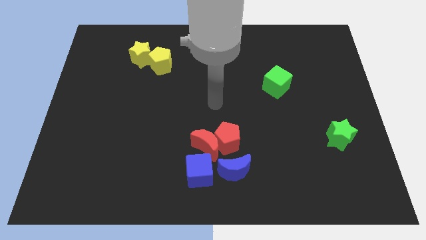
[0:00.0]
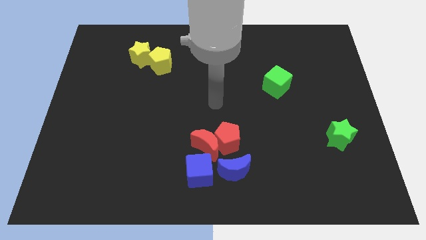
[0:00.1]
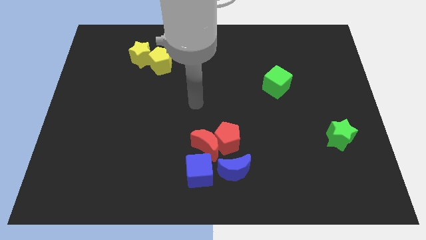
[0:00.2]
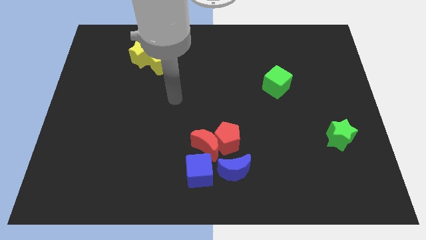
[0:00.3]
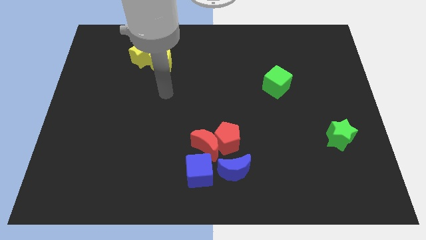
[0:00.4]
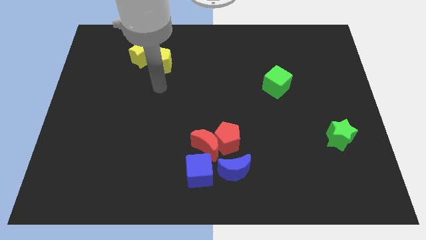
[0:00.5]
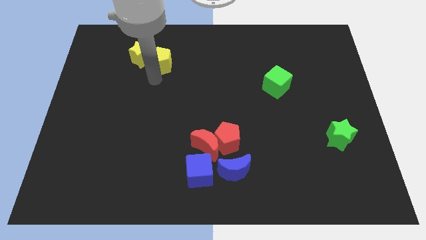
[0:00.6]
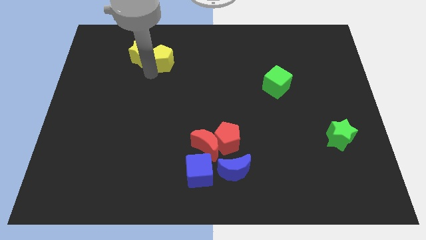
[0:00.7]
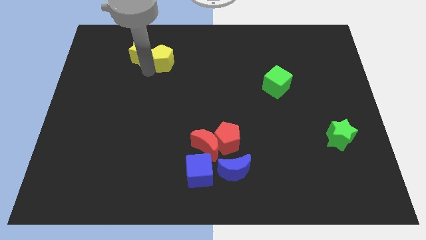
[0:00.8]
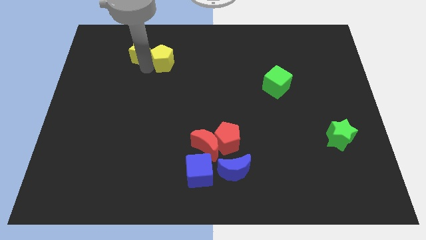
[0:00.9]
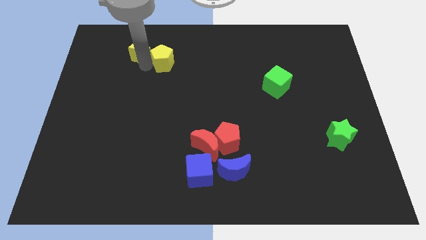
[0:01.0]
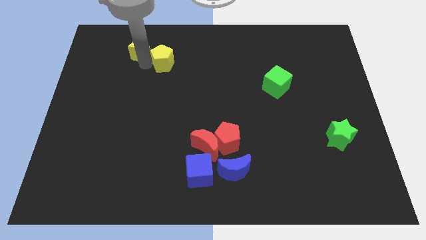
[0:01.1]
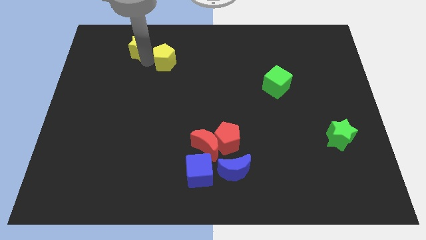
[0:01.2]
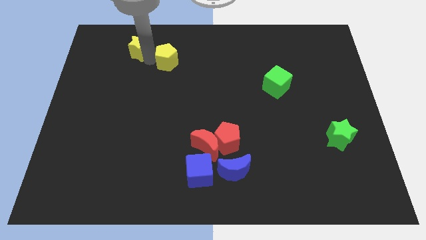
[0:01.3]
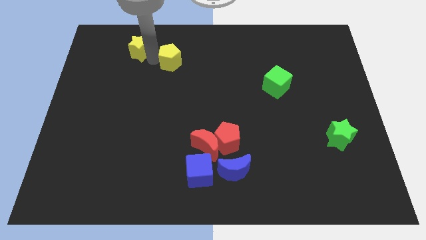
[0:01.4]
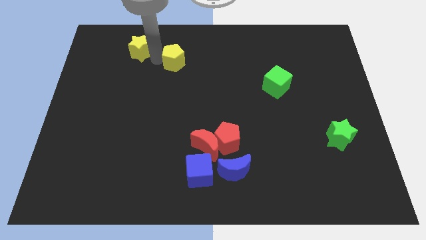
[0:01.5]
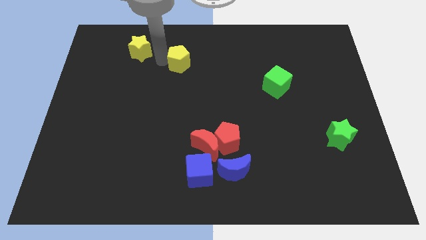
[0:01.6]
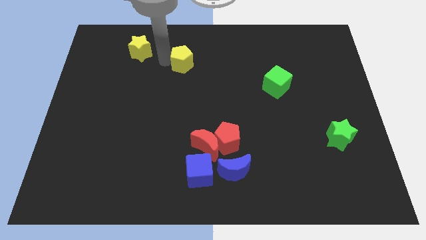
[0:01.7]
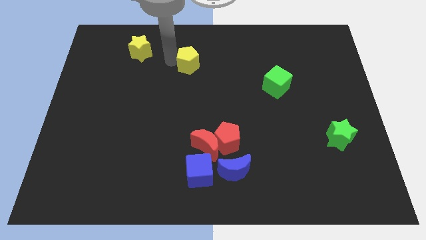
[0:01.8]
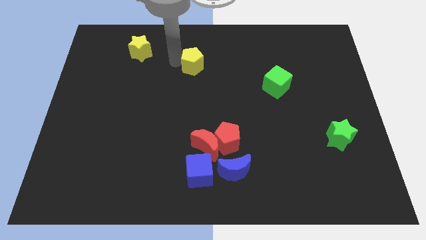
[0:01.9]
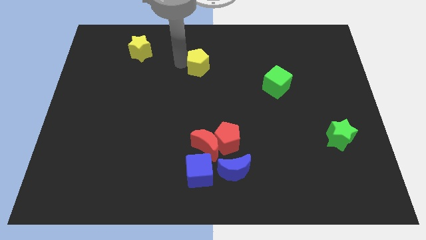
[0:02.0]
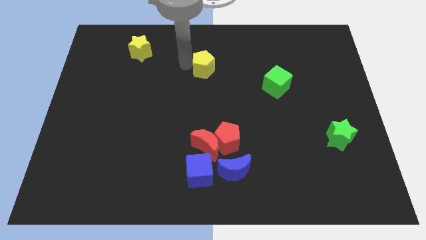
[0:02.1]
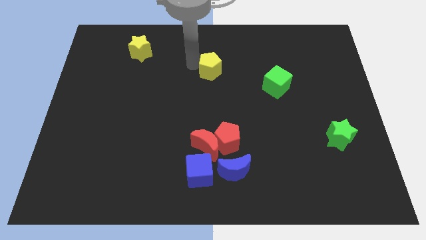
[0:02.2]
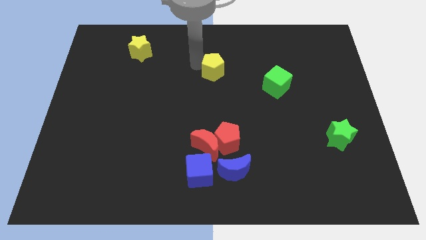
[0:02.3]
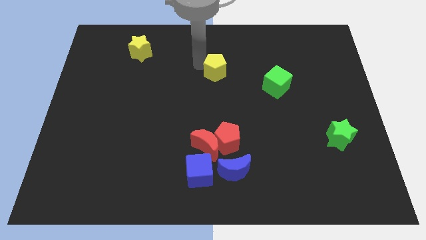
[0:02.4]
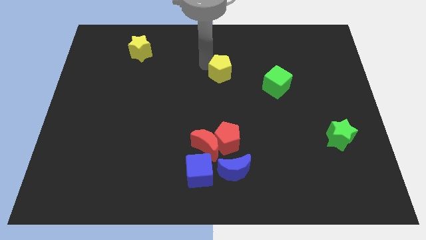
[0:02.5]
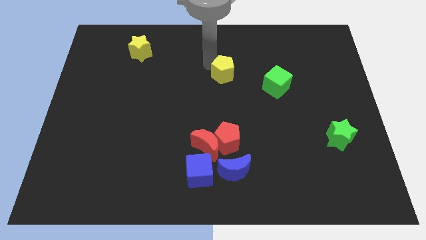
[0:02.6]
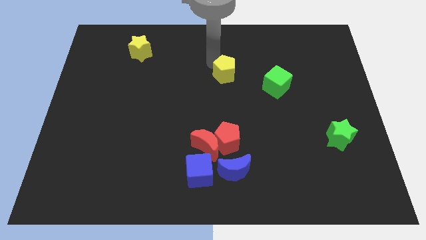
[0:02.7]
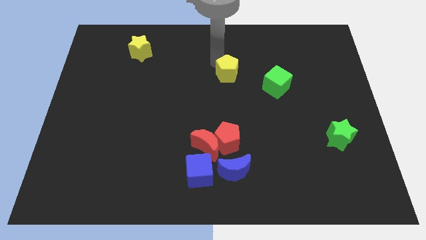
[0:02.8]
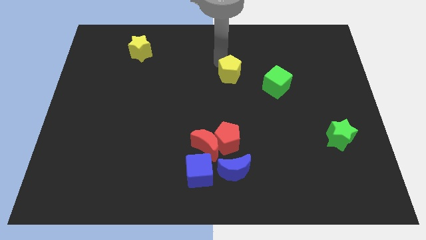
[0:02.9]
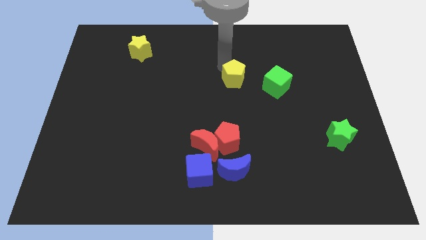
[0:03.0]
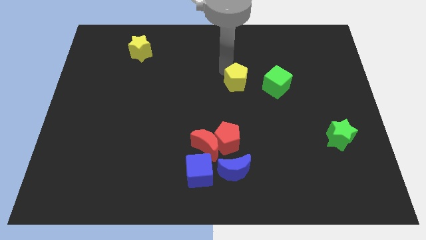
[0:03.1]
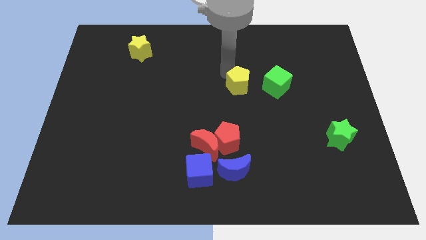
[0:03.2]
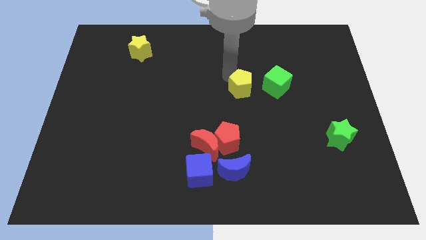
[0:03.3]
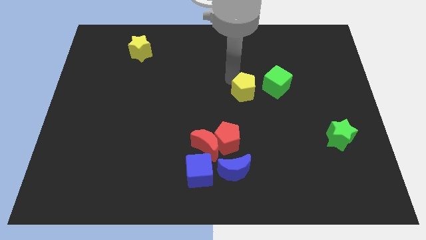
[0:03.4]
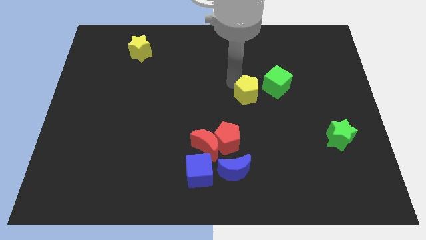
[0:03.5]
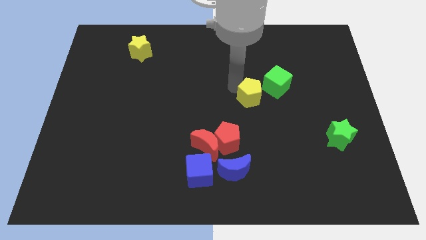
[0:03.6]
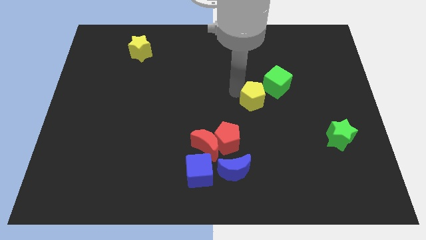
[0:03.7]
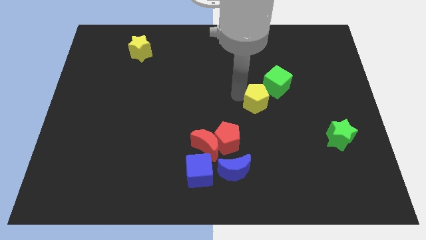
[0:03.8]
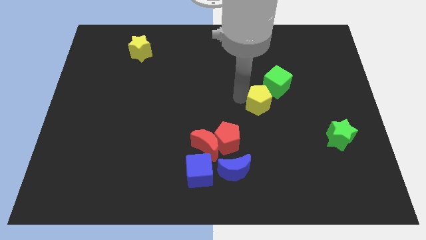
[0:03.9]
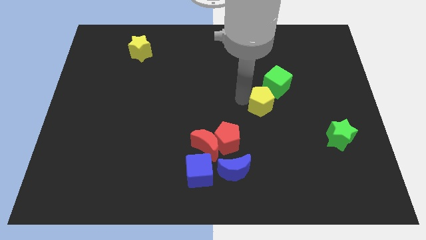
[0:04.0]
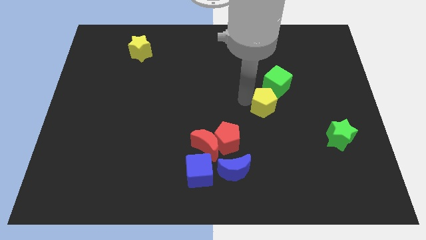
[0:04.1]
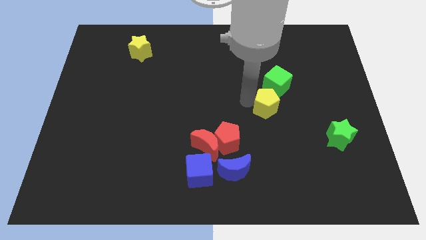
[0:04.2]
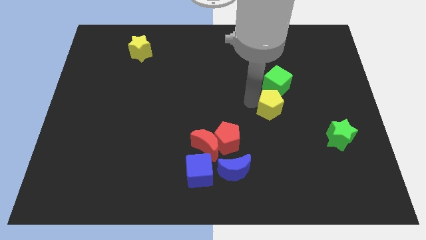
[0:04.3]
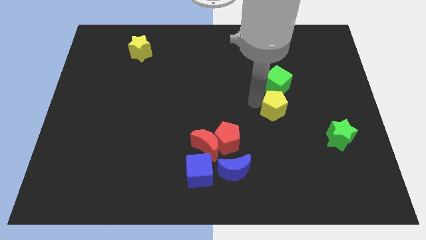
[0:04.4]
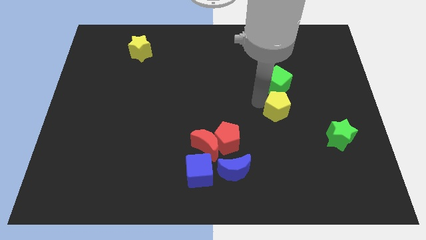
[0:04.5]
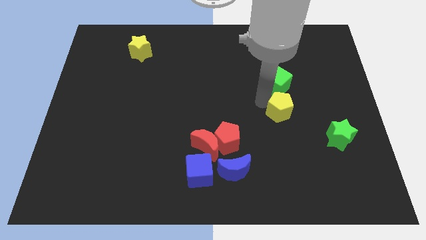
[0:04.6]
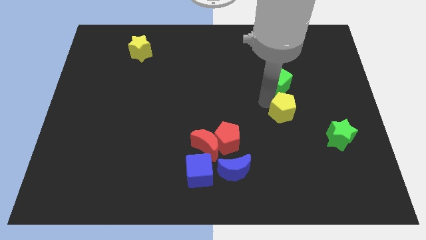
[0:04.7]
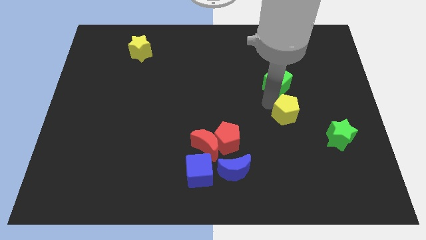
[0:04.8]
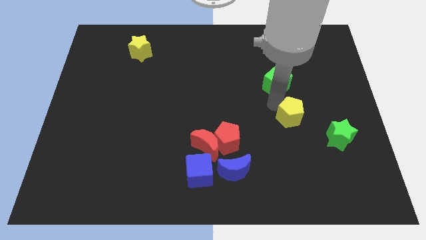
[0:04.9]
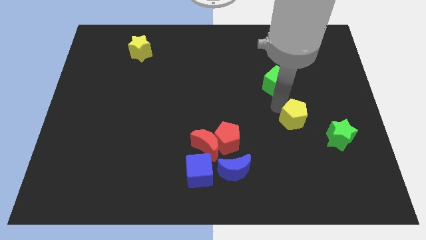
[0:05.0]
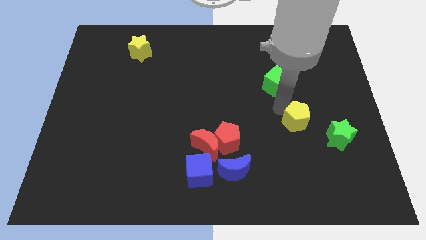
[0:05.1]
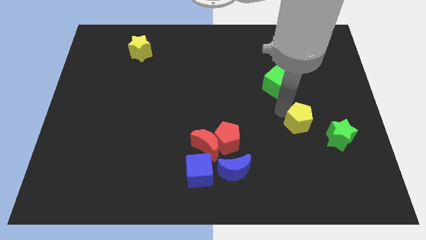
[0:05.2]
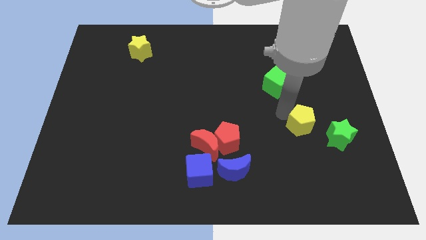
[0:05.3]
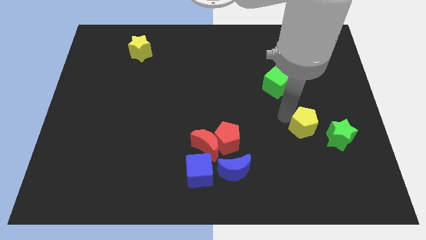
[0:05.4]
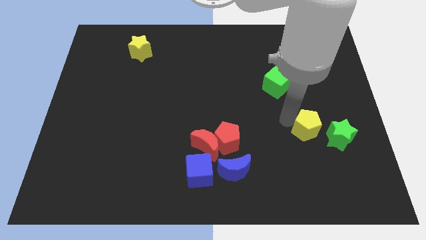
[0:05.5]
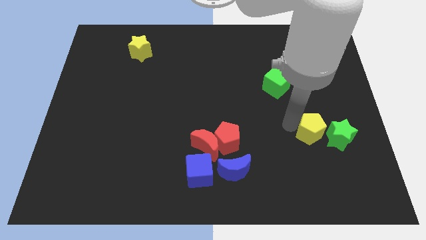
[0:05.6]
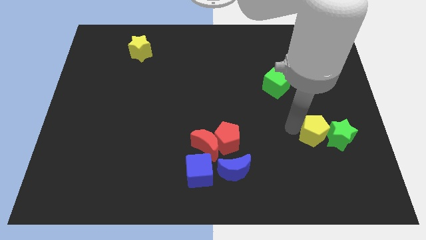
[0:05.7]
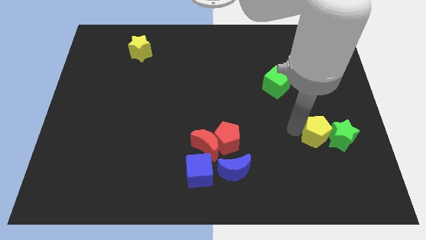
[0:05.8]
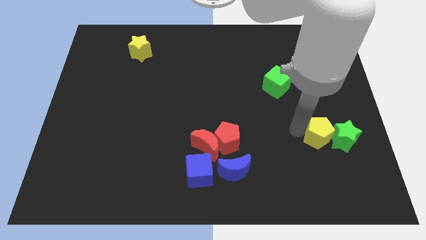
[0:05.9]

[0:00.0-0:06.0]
move the yellow pentagon towards the green star

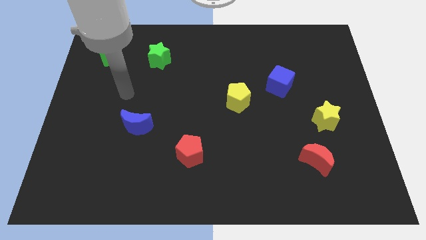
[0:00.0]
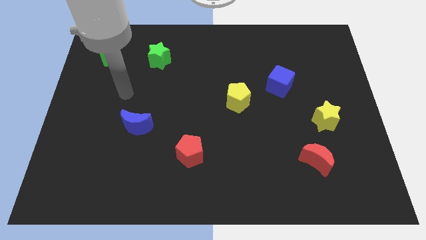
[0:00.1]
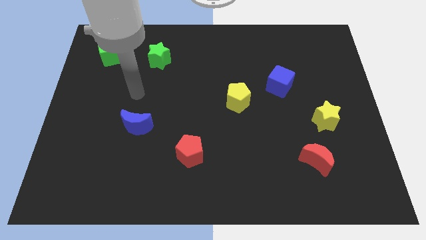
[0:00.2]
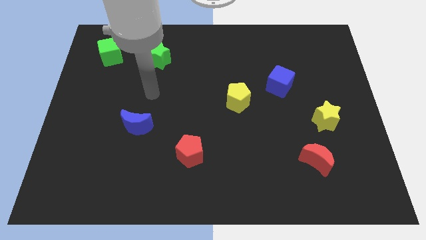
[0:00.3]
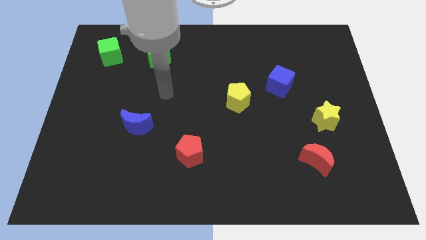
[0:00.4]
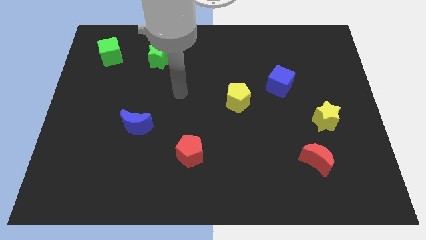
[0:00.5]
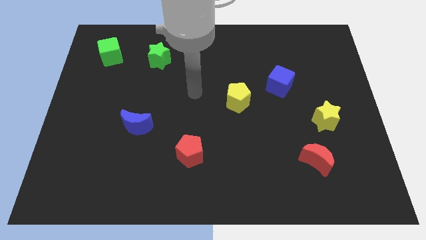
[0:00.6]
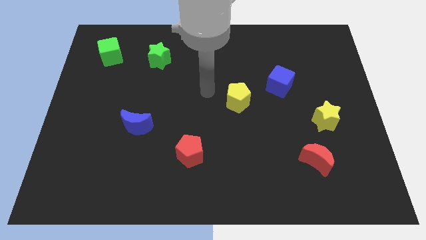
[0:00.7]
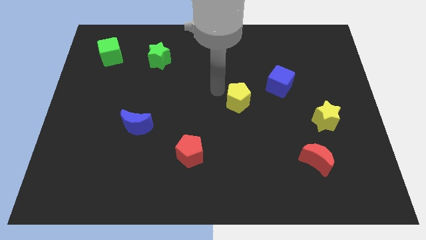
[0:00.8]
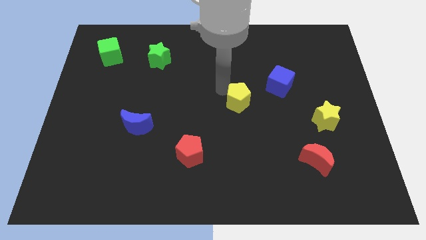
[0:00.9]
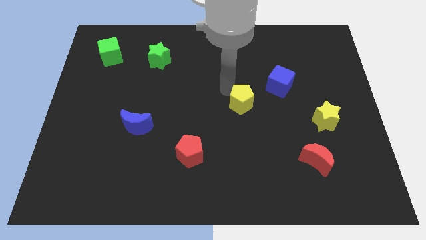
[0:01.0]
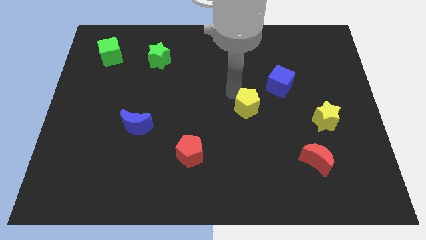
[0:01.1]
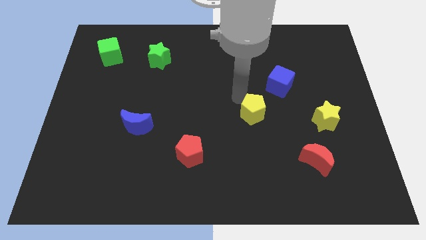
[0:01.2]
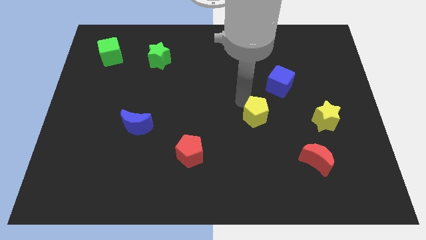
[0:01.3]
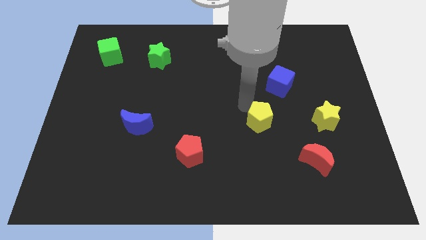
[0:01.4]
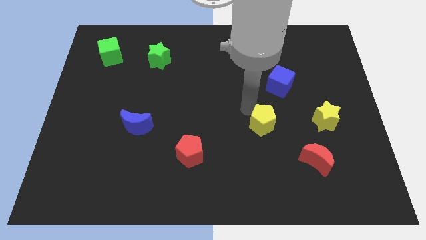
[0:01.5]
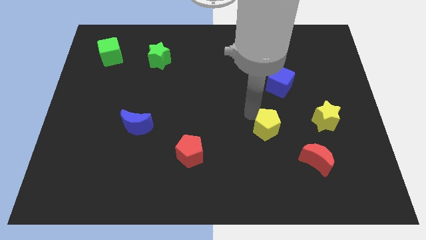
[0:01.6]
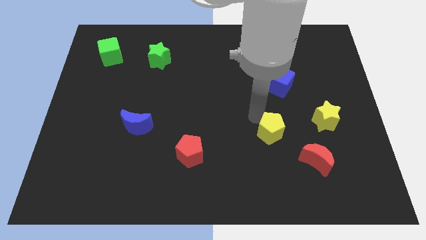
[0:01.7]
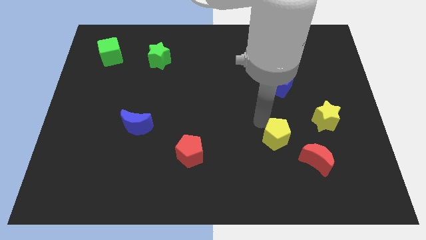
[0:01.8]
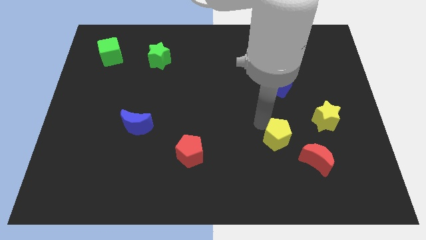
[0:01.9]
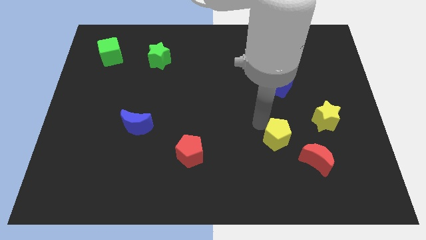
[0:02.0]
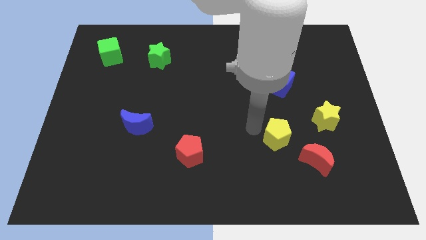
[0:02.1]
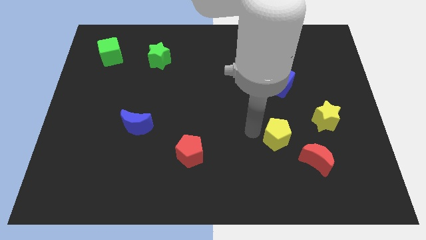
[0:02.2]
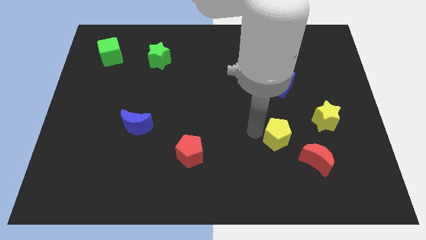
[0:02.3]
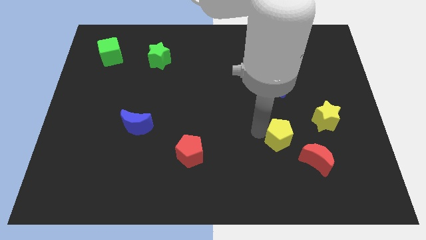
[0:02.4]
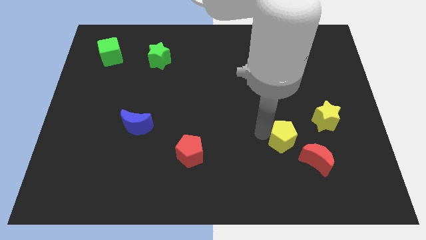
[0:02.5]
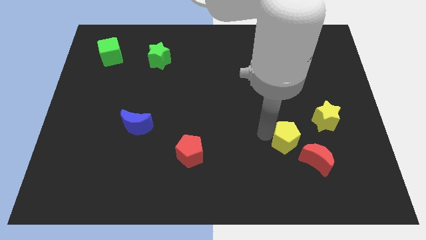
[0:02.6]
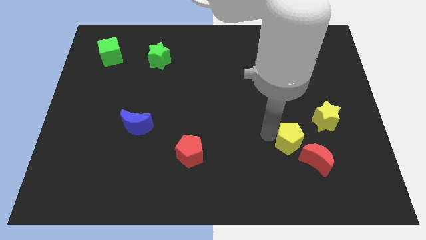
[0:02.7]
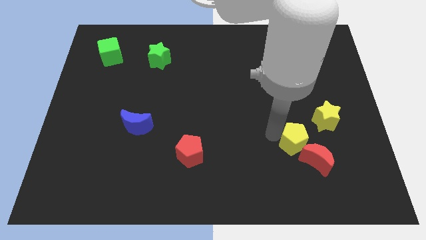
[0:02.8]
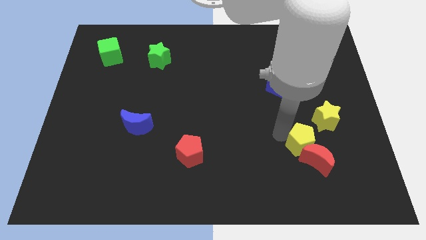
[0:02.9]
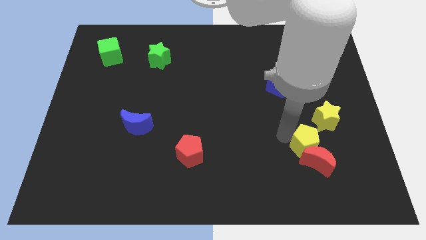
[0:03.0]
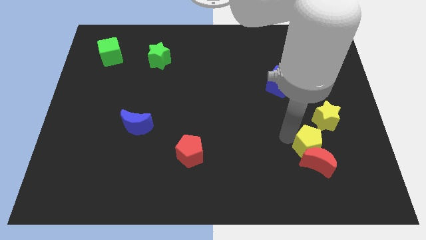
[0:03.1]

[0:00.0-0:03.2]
push the yellow pentagon close to the red moon
